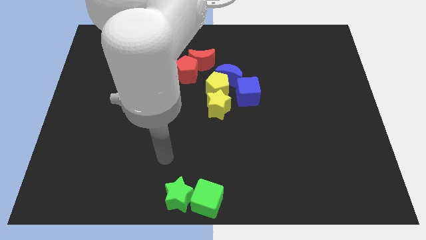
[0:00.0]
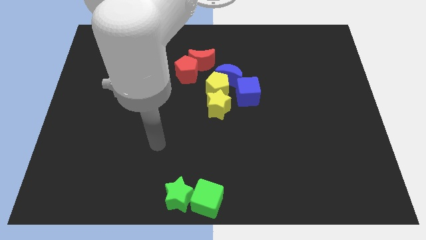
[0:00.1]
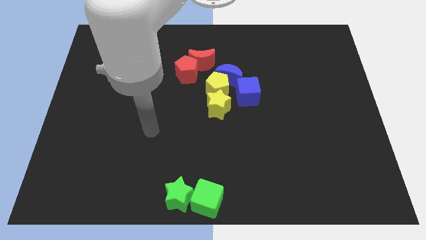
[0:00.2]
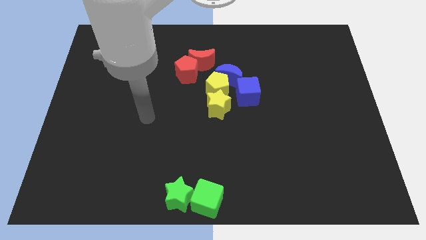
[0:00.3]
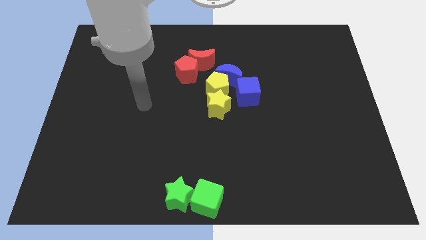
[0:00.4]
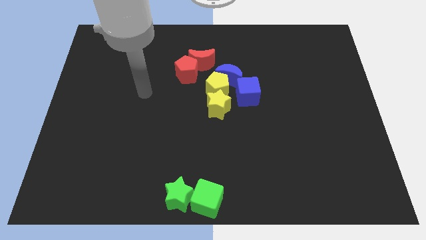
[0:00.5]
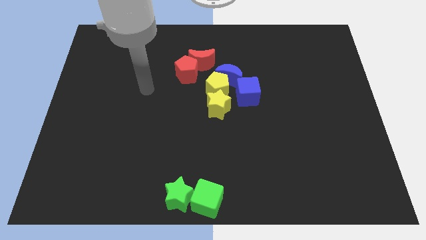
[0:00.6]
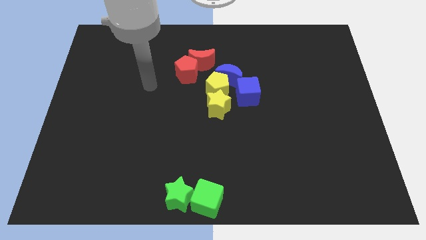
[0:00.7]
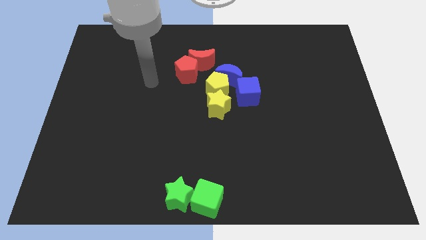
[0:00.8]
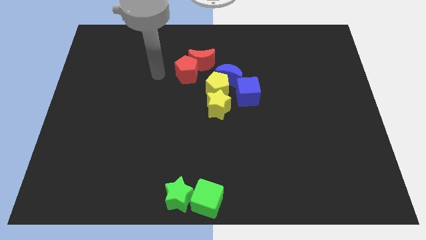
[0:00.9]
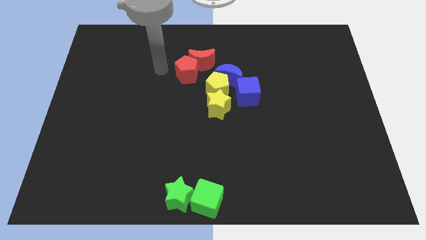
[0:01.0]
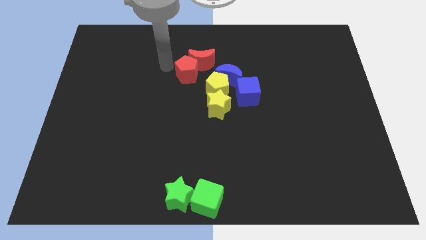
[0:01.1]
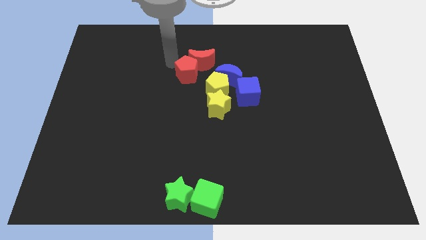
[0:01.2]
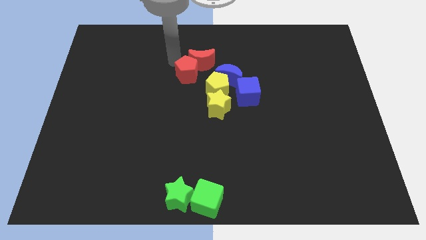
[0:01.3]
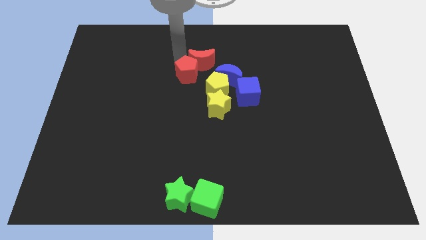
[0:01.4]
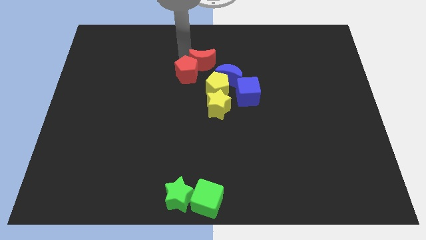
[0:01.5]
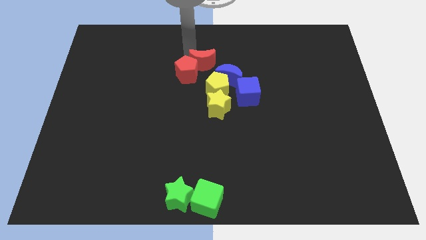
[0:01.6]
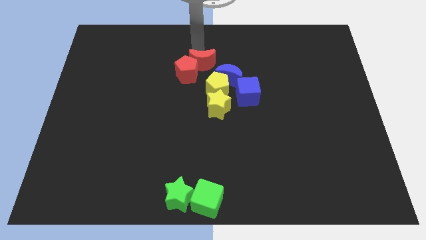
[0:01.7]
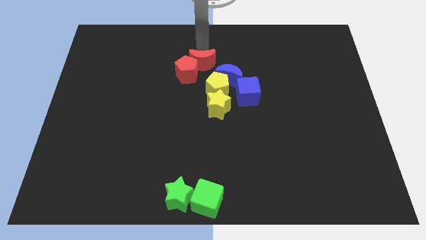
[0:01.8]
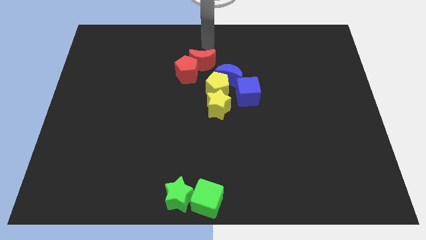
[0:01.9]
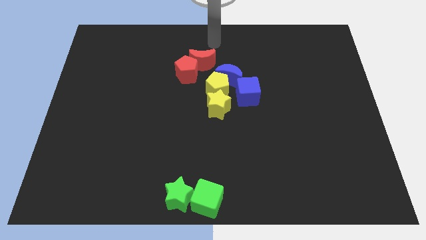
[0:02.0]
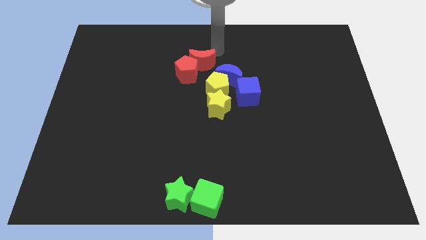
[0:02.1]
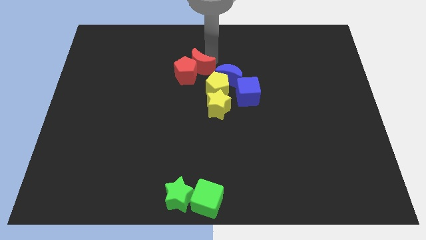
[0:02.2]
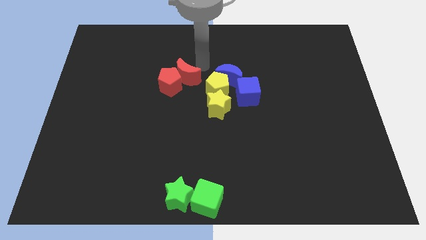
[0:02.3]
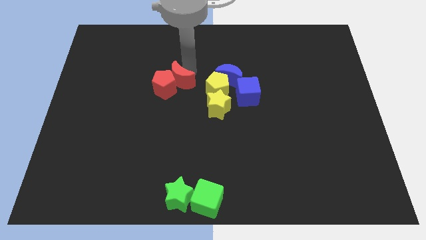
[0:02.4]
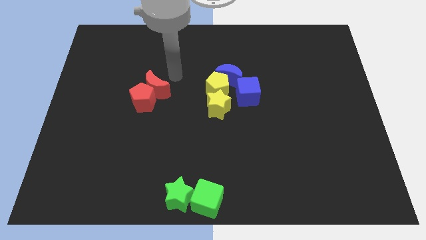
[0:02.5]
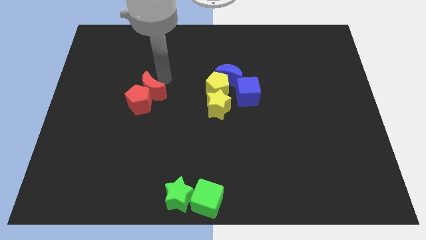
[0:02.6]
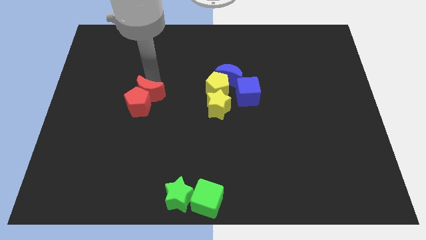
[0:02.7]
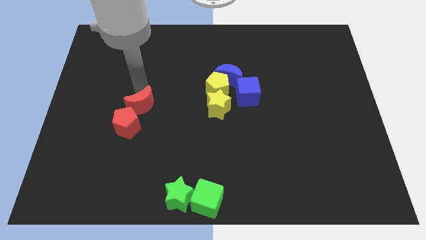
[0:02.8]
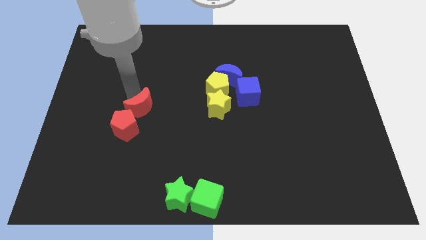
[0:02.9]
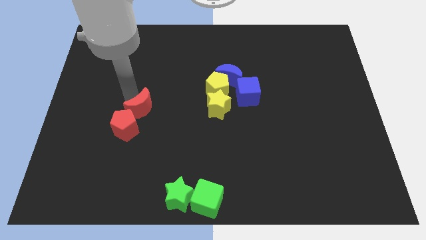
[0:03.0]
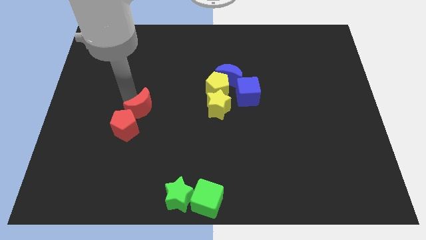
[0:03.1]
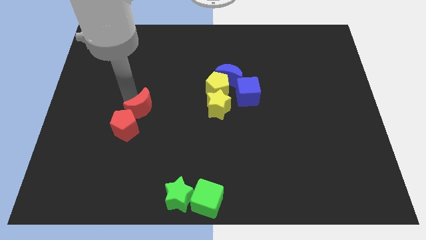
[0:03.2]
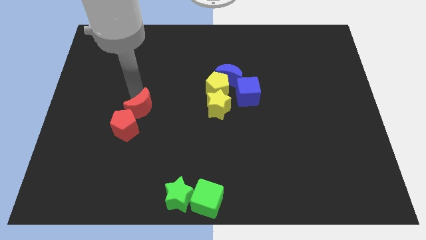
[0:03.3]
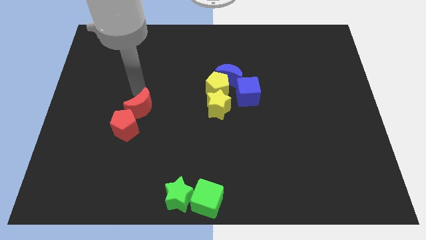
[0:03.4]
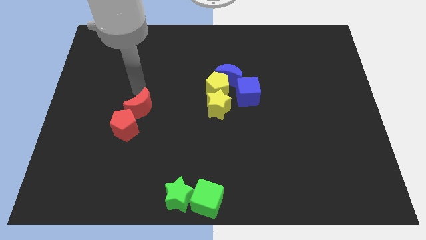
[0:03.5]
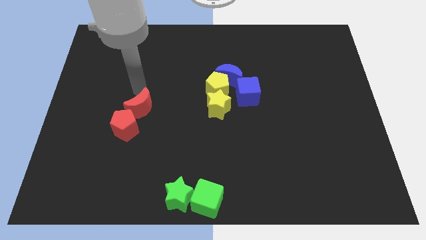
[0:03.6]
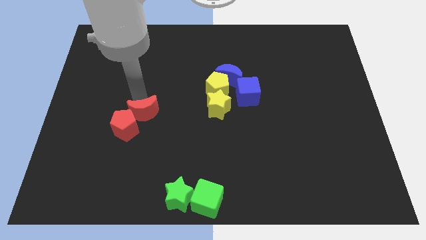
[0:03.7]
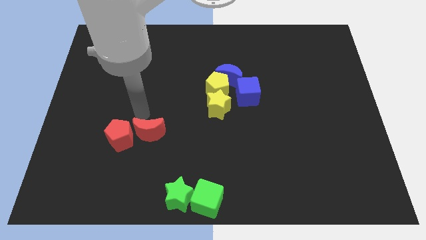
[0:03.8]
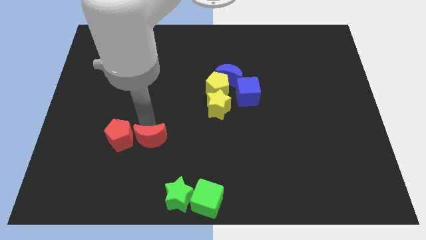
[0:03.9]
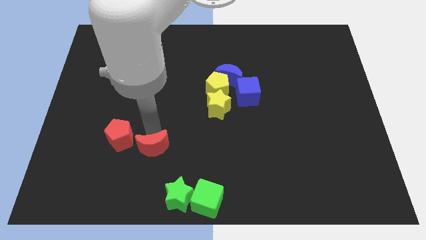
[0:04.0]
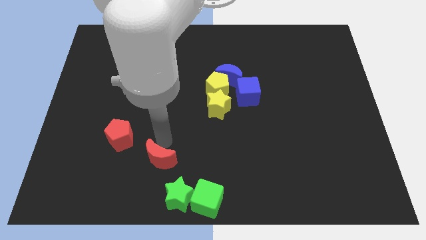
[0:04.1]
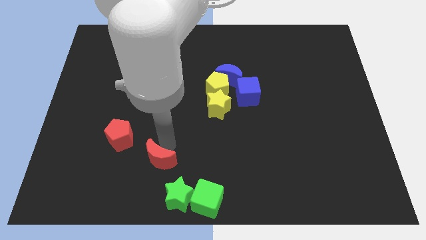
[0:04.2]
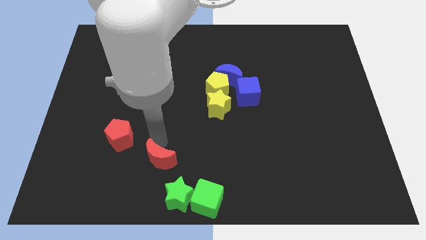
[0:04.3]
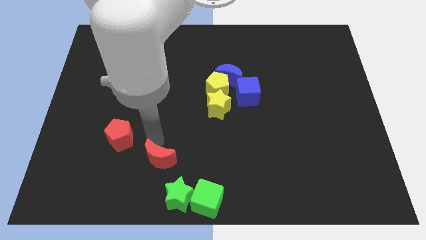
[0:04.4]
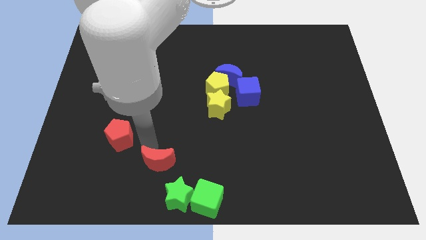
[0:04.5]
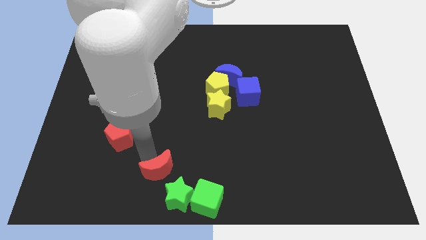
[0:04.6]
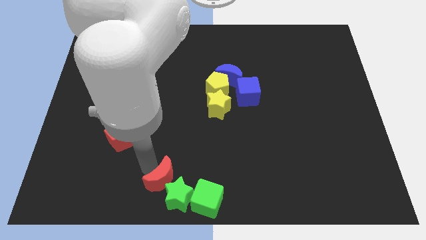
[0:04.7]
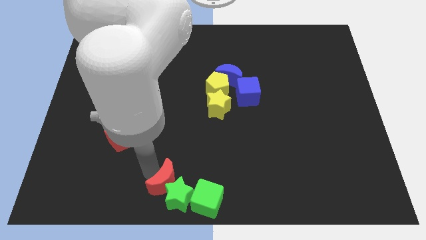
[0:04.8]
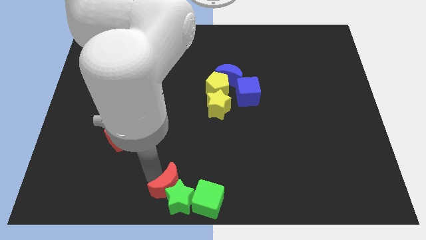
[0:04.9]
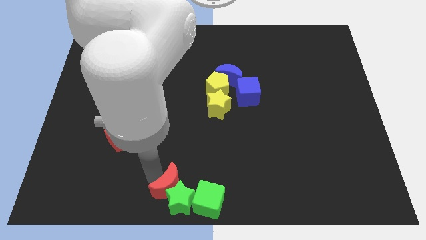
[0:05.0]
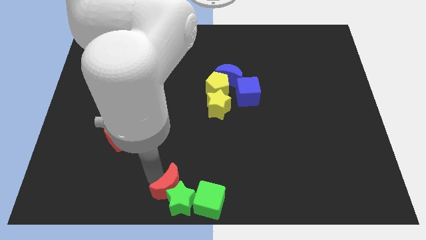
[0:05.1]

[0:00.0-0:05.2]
separate the red moon from the red pentagon

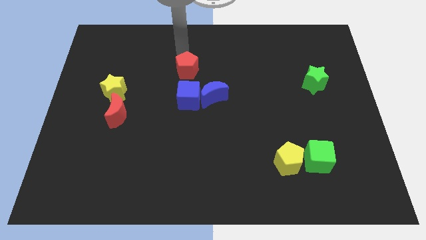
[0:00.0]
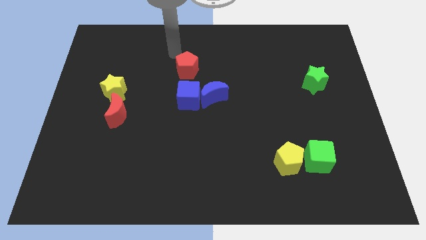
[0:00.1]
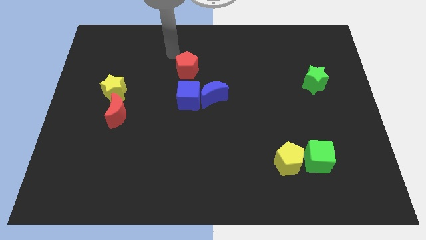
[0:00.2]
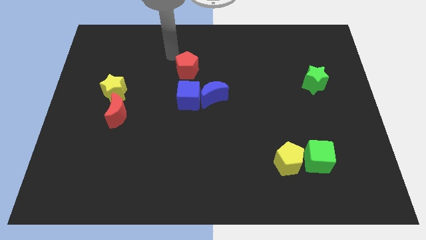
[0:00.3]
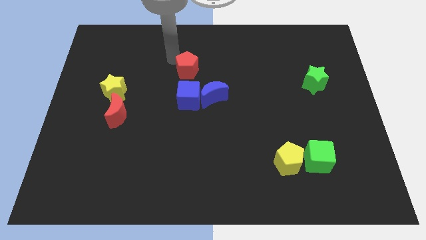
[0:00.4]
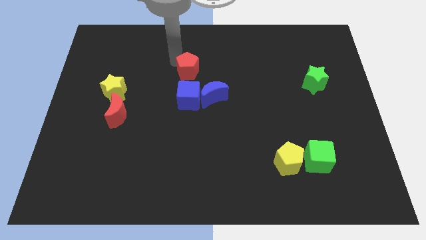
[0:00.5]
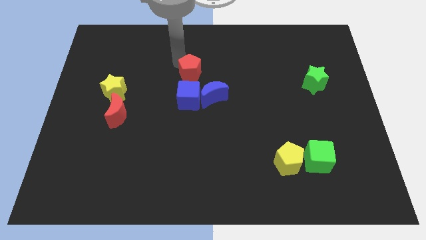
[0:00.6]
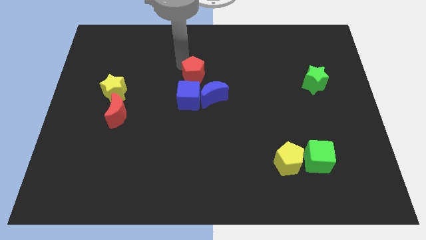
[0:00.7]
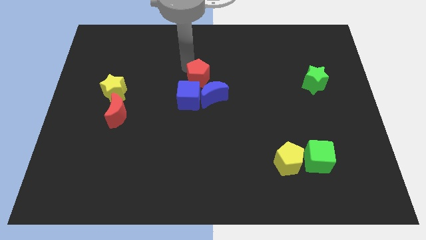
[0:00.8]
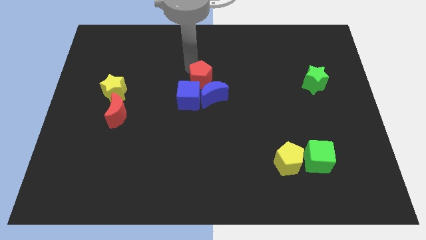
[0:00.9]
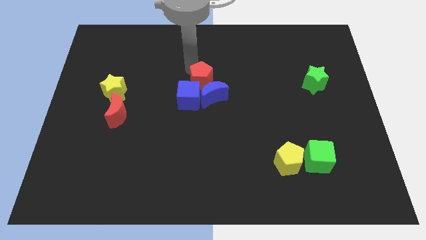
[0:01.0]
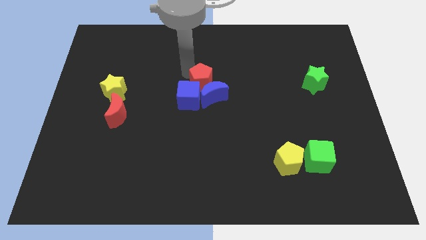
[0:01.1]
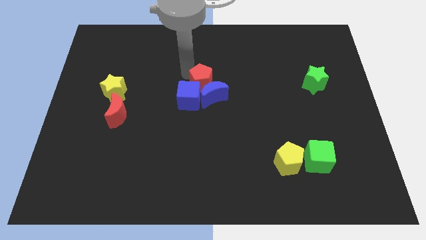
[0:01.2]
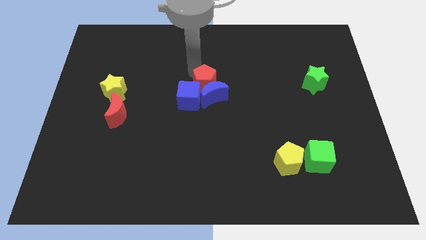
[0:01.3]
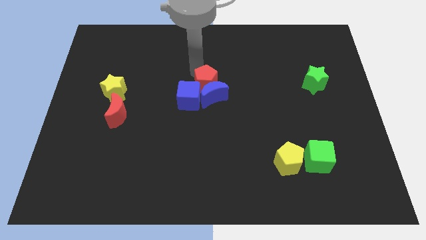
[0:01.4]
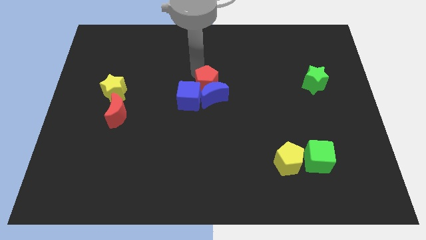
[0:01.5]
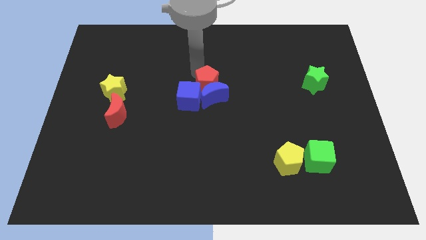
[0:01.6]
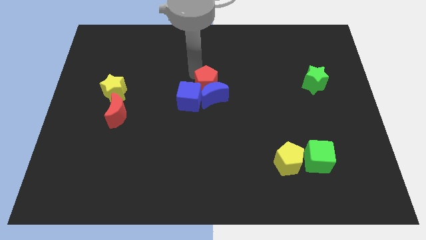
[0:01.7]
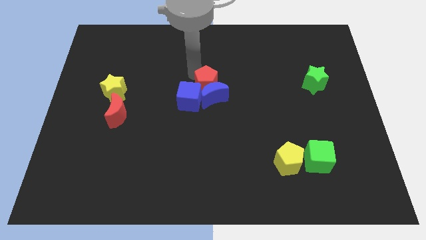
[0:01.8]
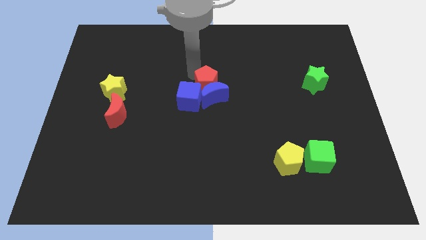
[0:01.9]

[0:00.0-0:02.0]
move the red pentagon towards the blue crescent

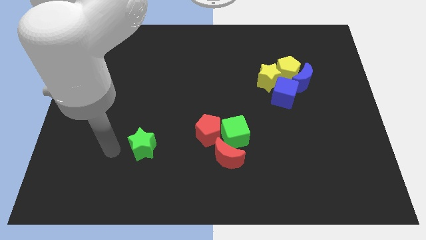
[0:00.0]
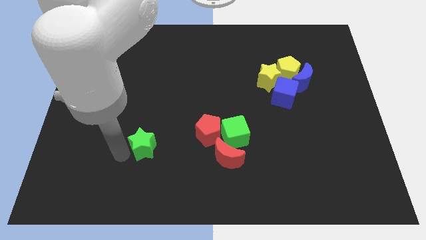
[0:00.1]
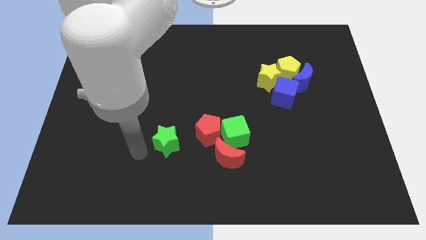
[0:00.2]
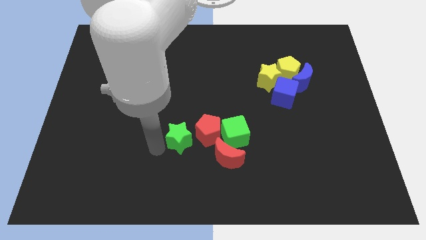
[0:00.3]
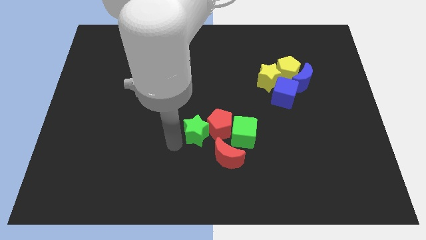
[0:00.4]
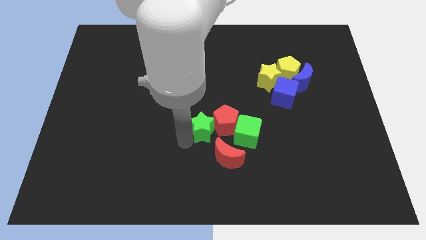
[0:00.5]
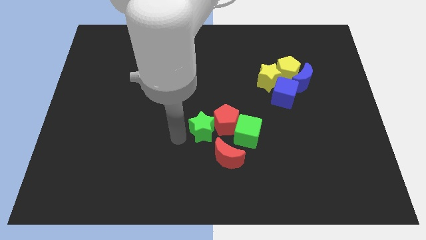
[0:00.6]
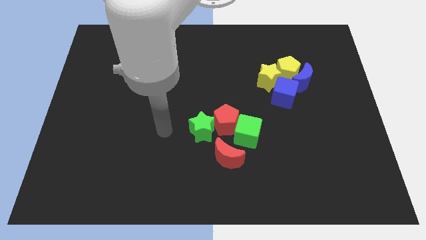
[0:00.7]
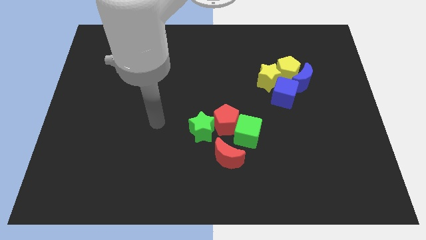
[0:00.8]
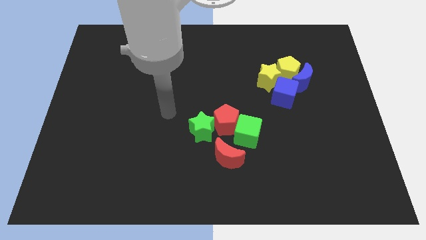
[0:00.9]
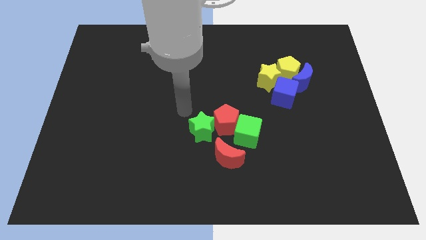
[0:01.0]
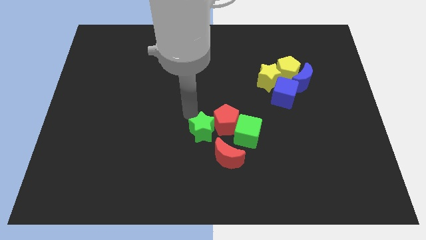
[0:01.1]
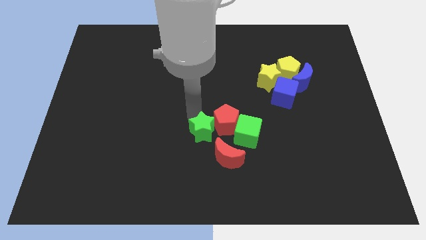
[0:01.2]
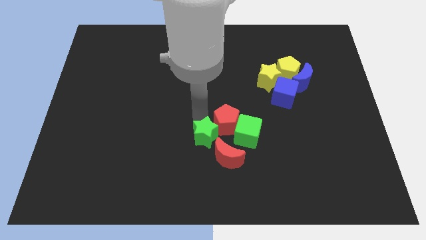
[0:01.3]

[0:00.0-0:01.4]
push the green star bottom left to the red pentagon

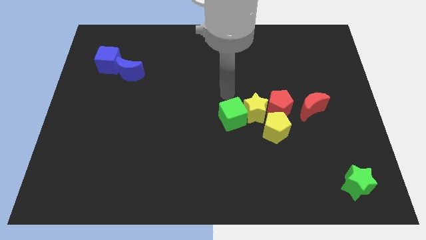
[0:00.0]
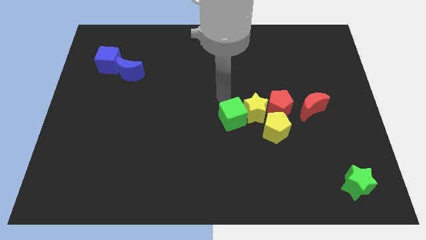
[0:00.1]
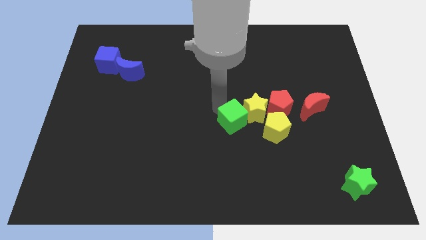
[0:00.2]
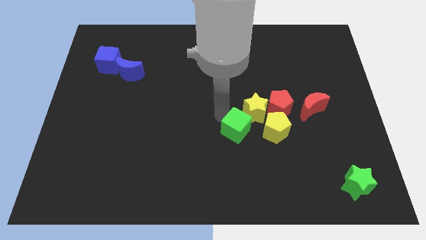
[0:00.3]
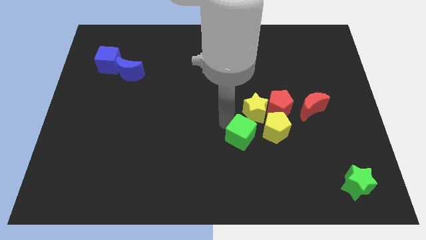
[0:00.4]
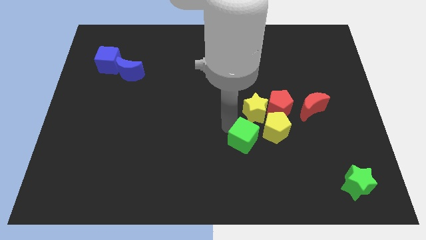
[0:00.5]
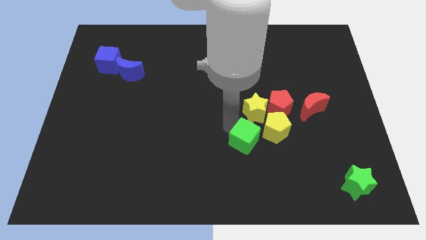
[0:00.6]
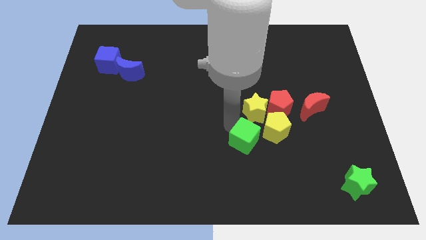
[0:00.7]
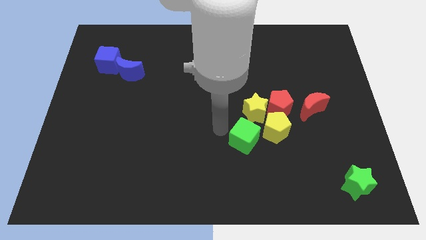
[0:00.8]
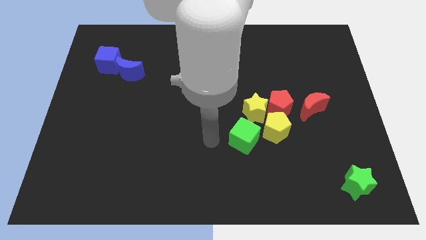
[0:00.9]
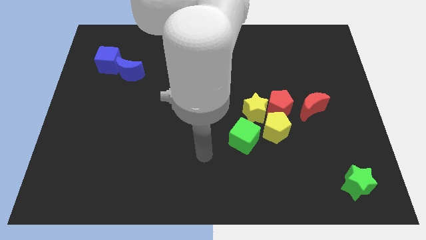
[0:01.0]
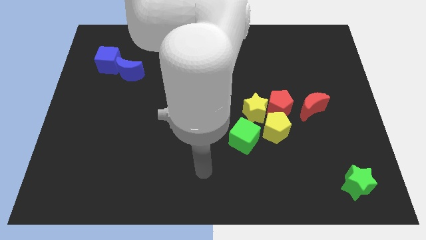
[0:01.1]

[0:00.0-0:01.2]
slide the green cube to the bottom left of the yellow pentagon
